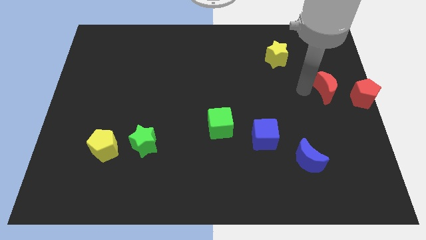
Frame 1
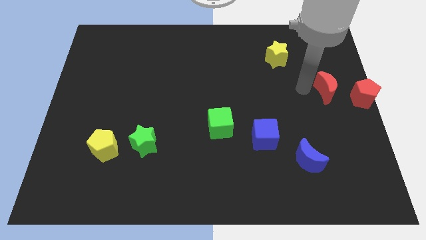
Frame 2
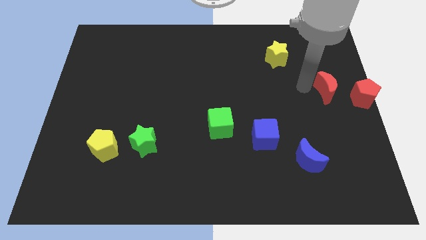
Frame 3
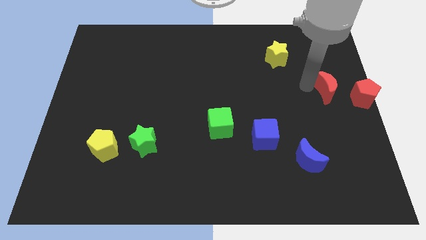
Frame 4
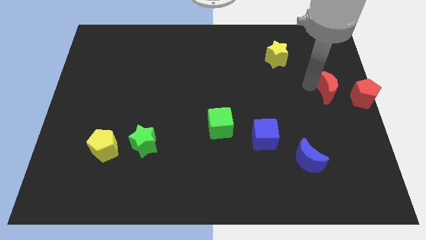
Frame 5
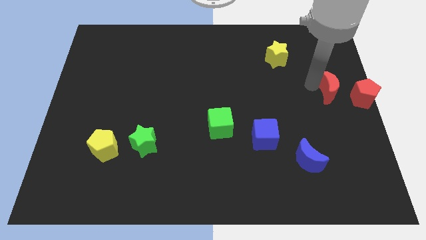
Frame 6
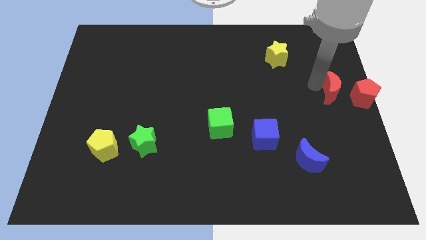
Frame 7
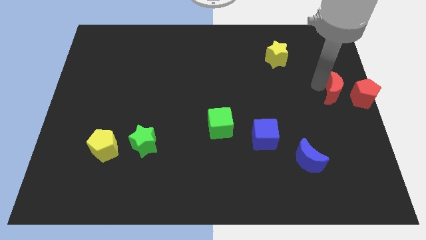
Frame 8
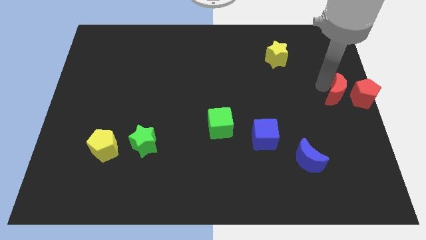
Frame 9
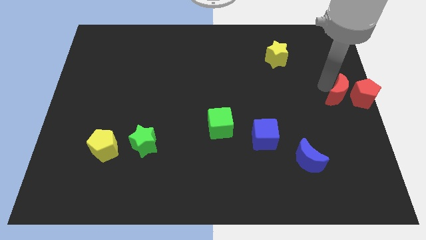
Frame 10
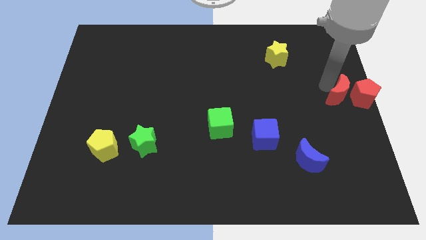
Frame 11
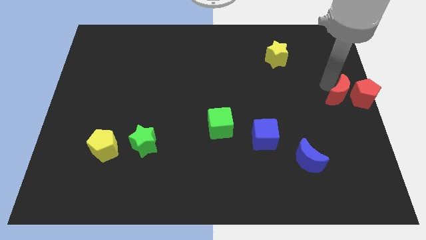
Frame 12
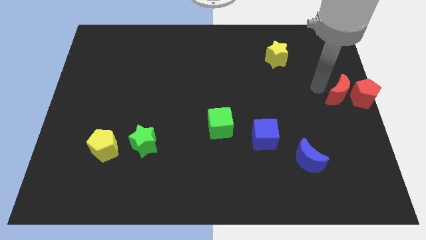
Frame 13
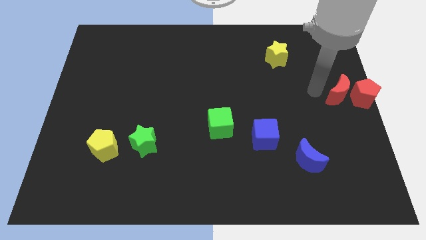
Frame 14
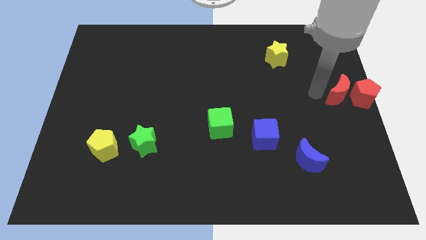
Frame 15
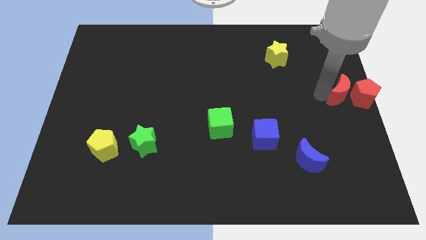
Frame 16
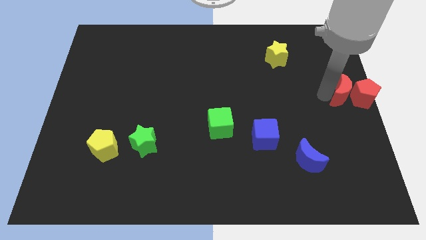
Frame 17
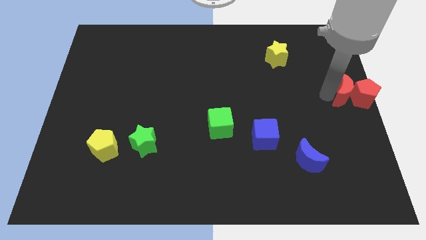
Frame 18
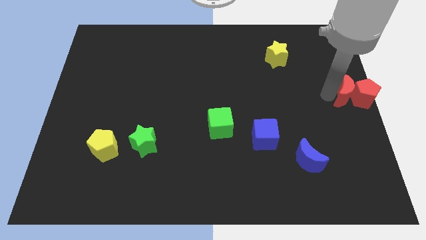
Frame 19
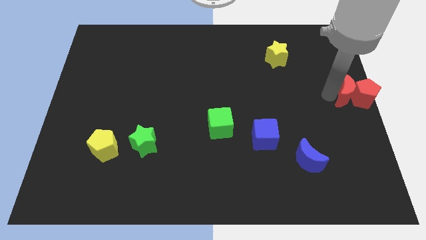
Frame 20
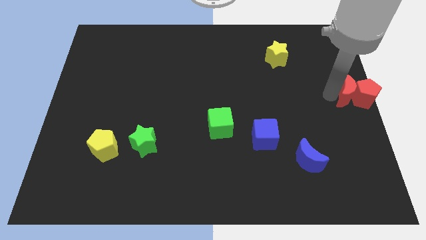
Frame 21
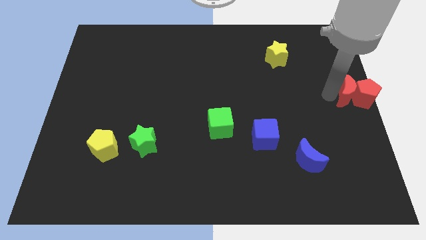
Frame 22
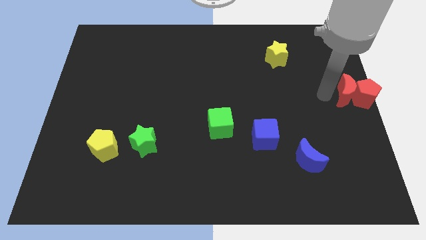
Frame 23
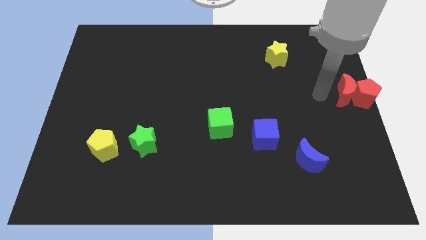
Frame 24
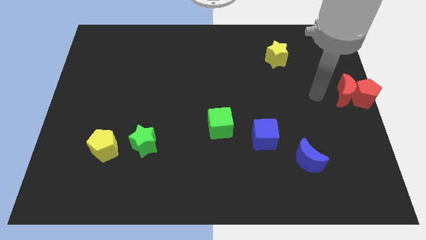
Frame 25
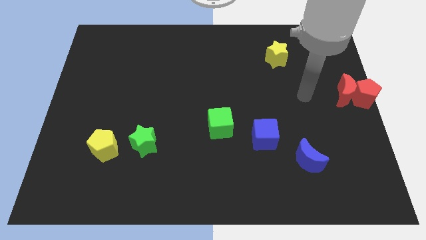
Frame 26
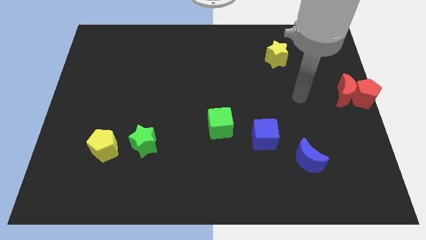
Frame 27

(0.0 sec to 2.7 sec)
push the red crescent into the red pentagon

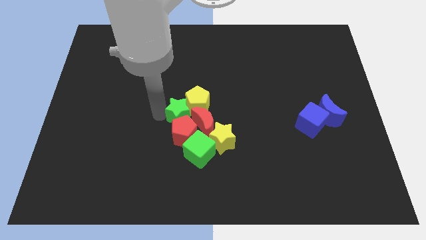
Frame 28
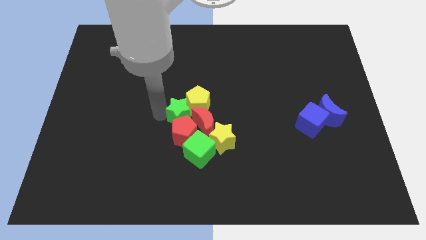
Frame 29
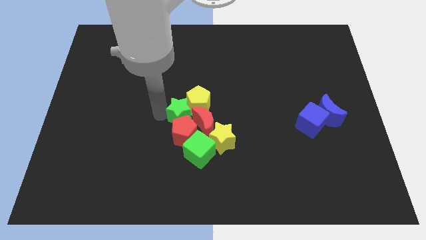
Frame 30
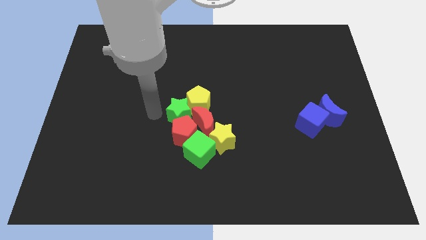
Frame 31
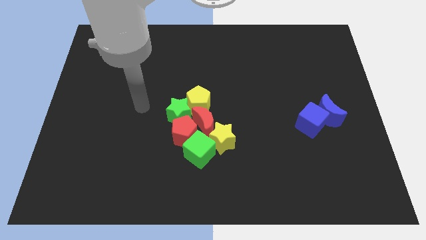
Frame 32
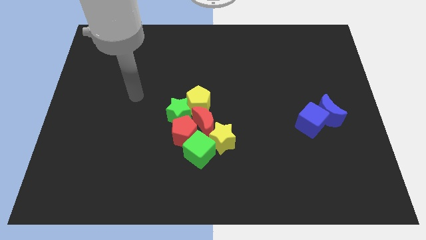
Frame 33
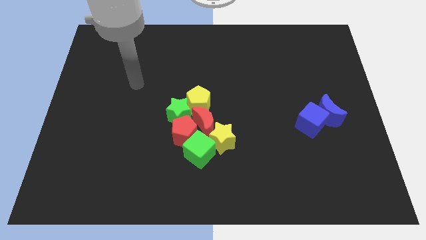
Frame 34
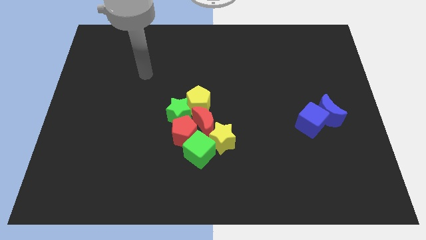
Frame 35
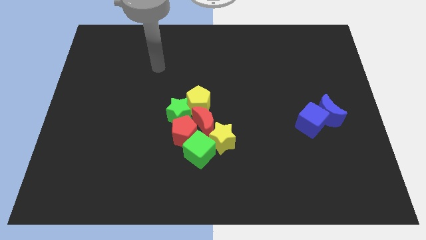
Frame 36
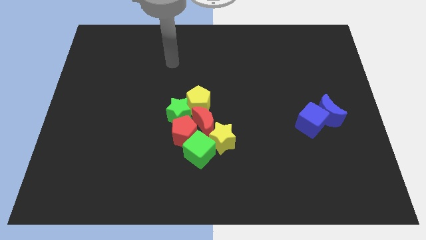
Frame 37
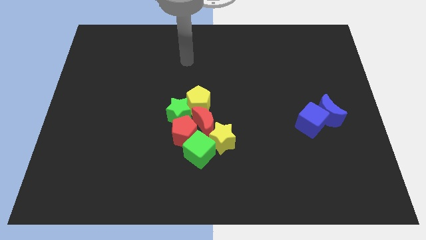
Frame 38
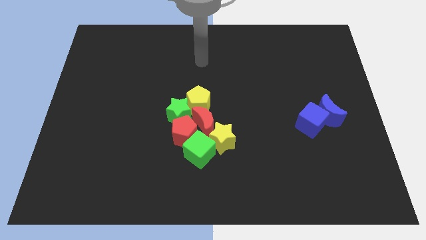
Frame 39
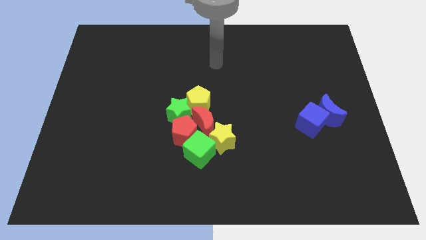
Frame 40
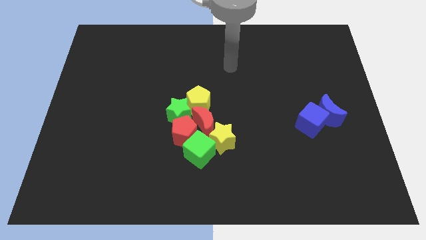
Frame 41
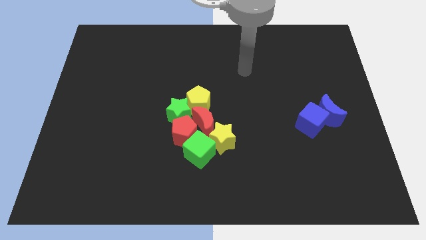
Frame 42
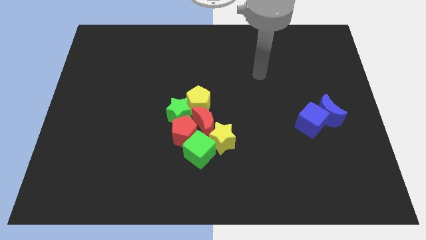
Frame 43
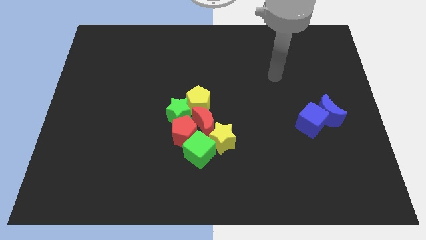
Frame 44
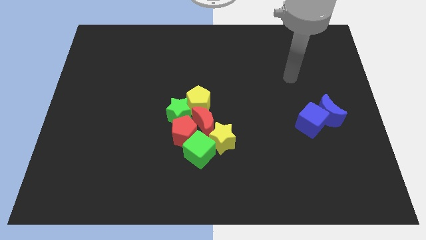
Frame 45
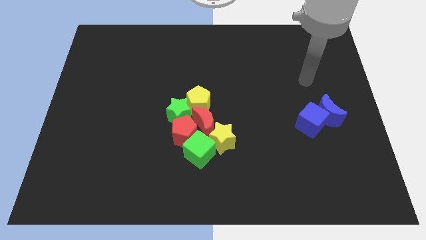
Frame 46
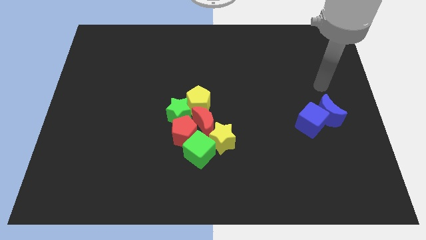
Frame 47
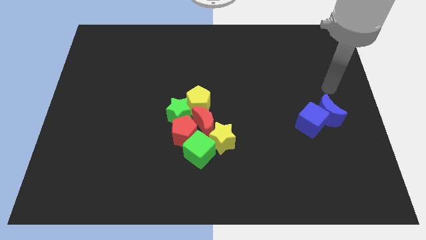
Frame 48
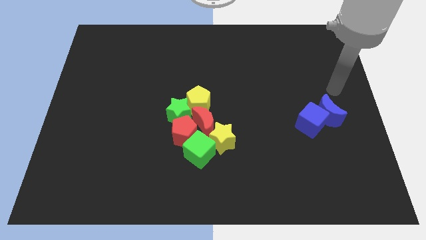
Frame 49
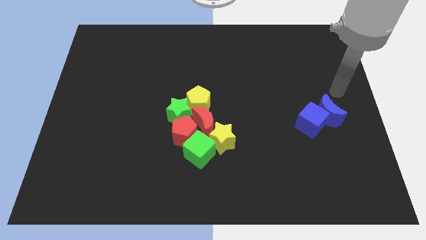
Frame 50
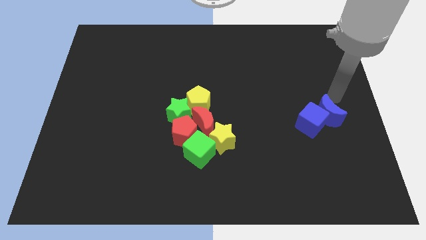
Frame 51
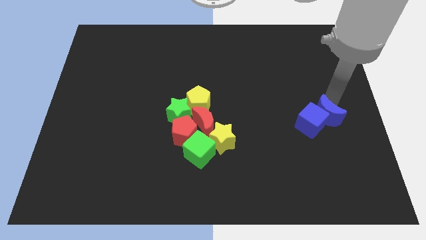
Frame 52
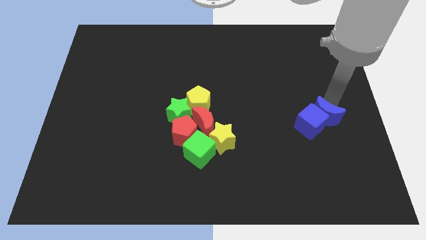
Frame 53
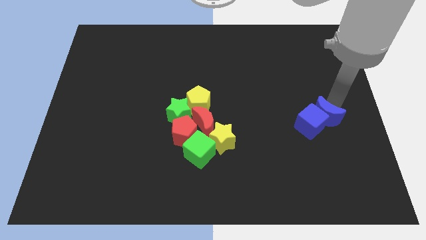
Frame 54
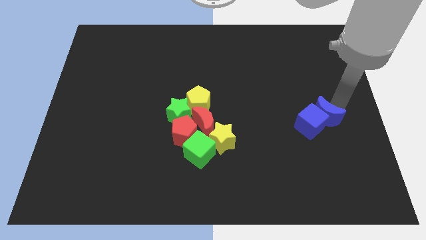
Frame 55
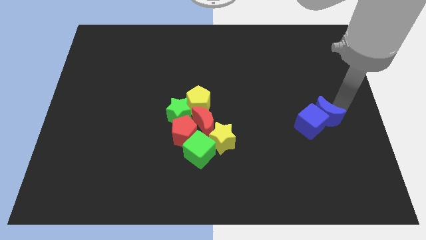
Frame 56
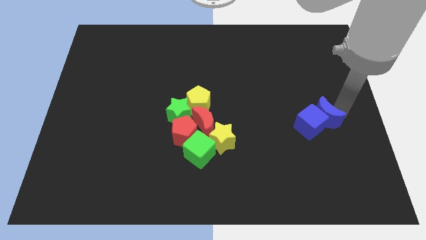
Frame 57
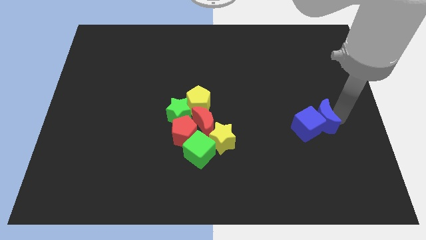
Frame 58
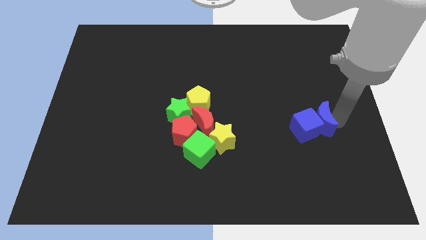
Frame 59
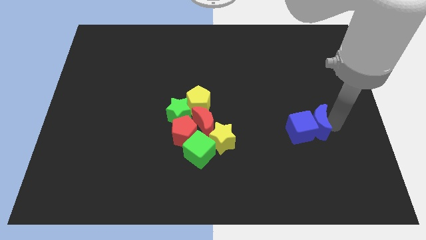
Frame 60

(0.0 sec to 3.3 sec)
slightly push both the blue blocks to the left

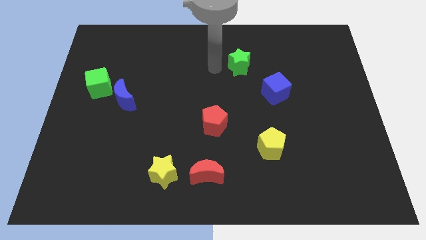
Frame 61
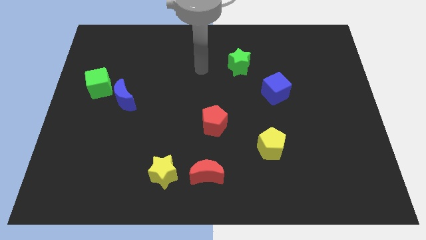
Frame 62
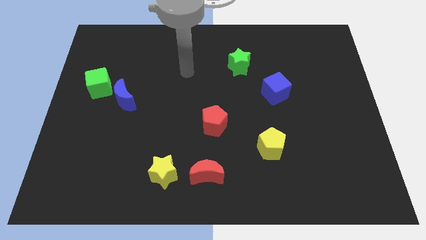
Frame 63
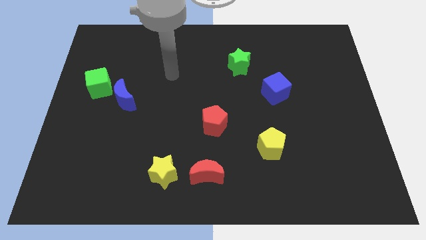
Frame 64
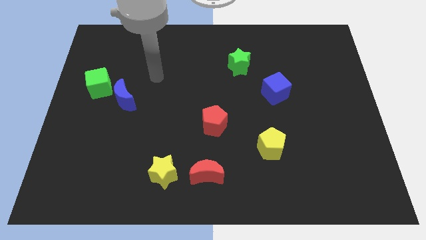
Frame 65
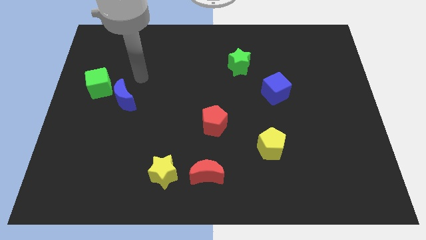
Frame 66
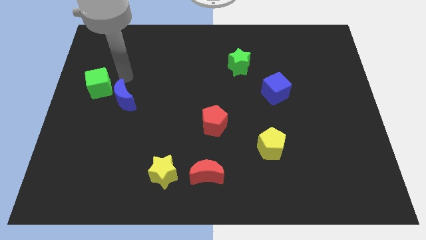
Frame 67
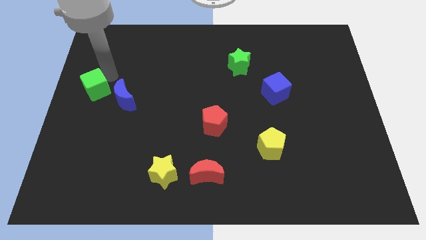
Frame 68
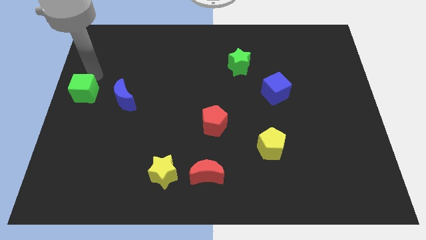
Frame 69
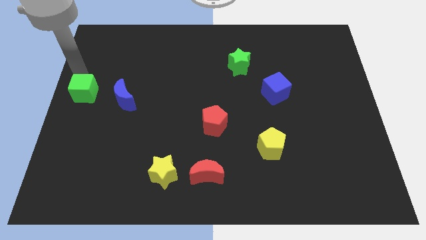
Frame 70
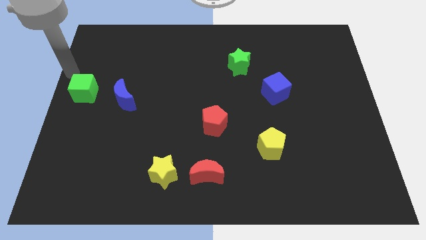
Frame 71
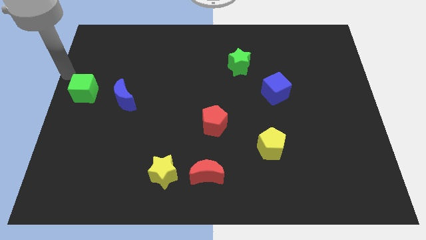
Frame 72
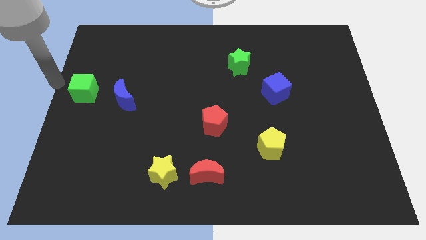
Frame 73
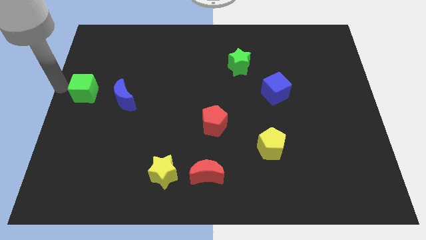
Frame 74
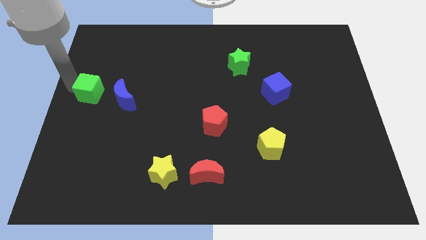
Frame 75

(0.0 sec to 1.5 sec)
tap the green cube

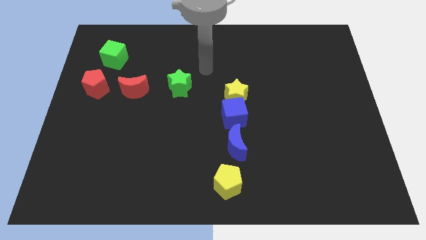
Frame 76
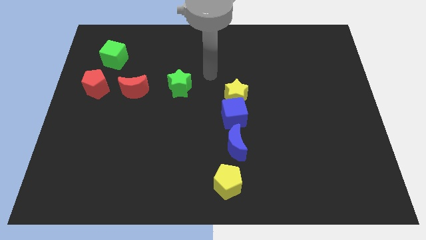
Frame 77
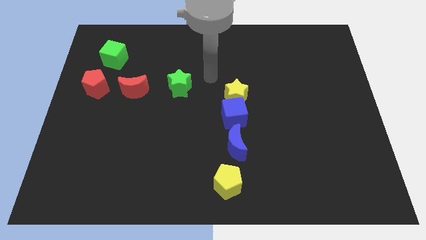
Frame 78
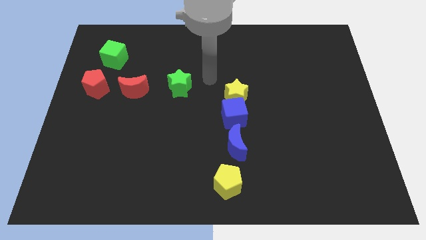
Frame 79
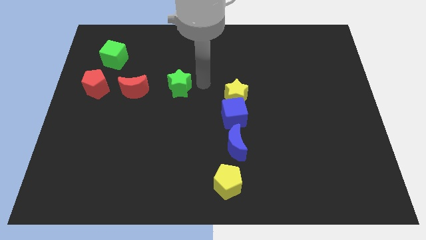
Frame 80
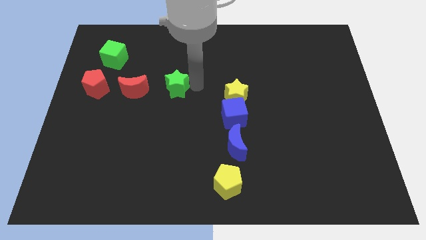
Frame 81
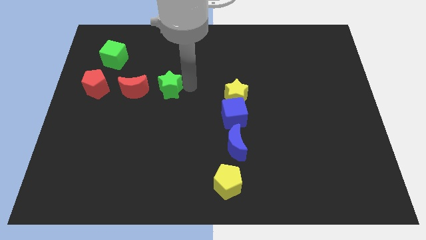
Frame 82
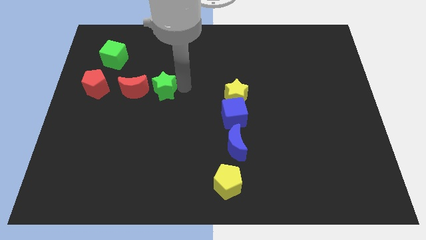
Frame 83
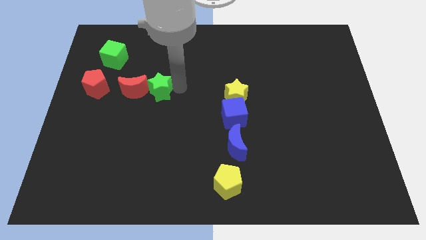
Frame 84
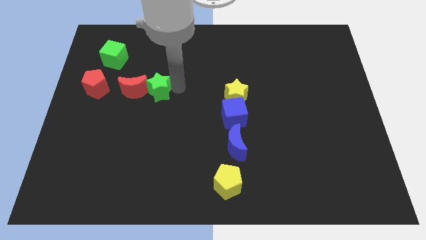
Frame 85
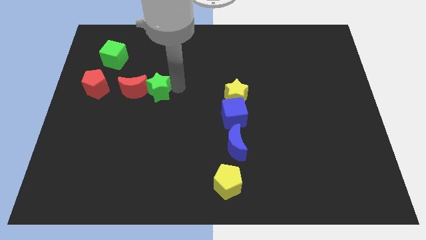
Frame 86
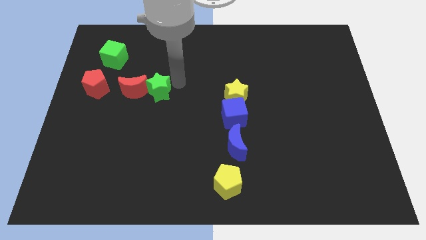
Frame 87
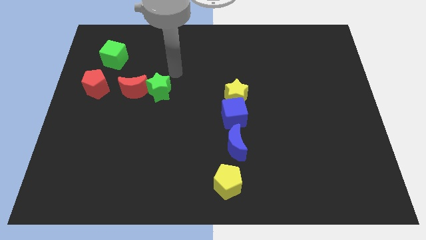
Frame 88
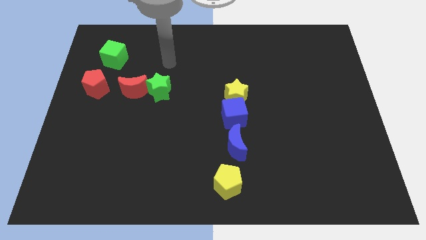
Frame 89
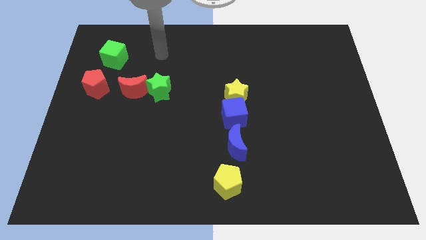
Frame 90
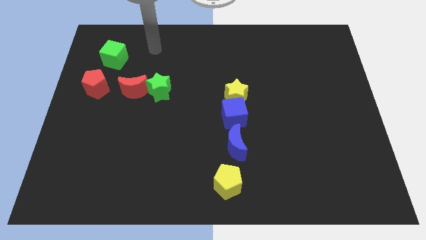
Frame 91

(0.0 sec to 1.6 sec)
move the green star into the red moon
